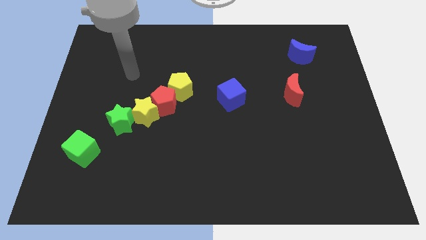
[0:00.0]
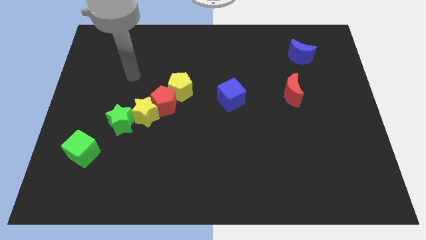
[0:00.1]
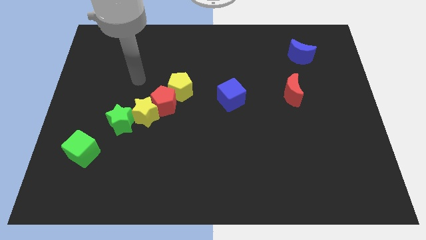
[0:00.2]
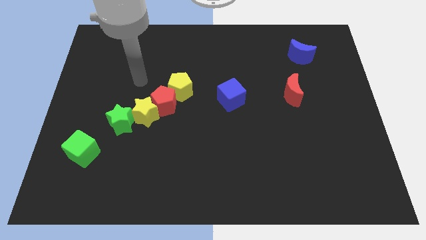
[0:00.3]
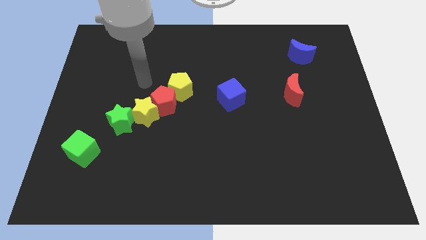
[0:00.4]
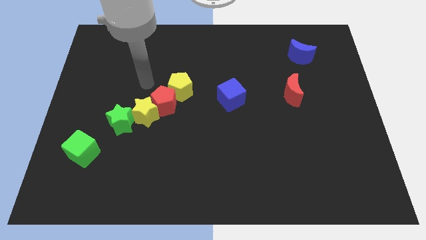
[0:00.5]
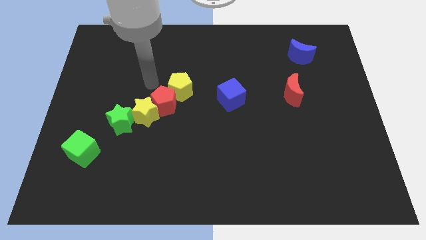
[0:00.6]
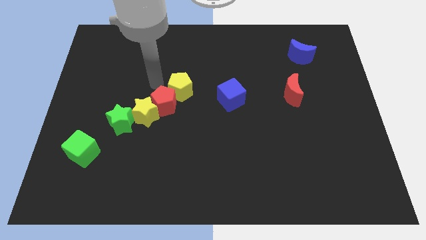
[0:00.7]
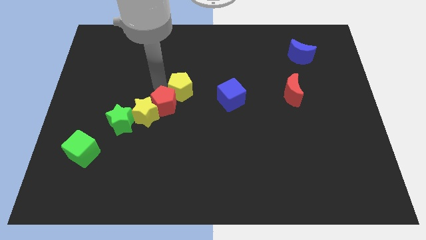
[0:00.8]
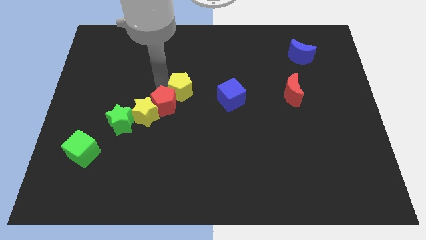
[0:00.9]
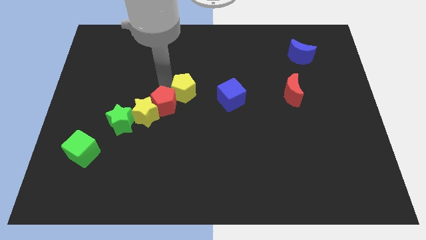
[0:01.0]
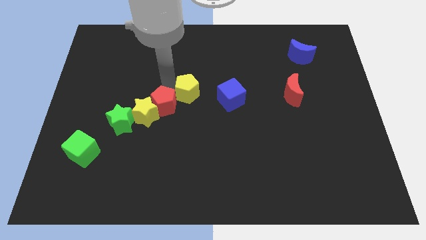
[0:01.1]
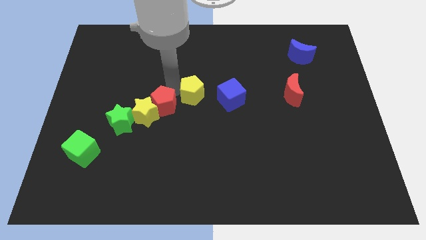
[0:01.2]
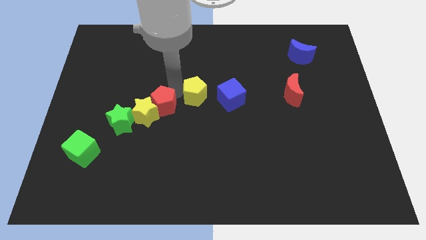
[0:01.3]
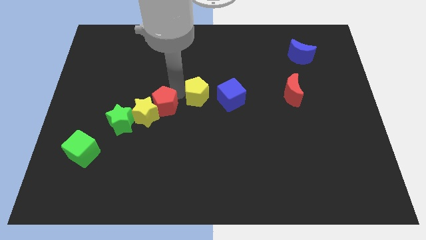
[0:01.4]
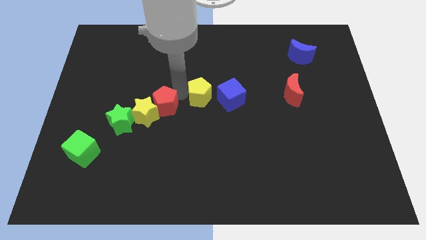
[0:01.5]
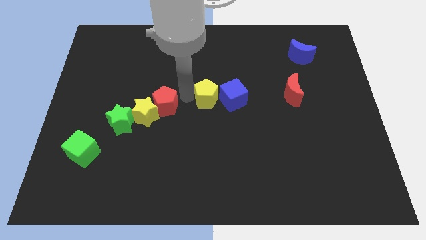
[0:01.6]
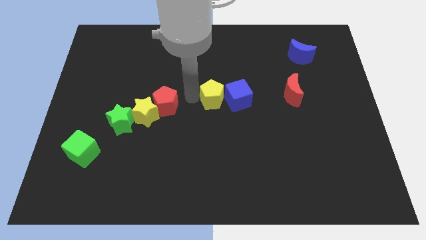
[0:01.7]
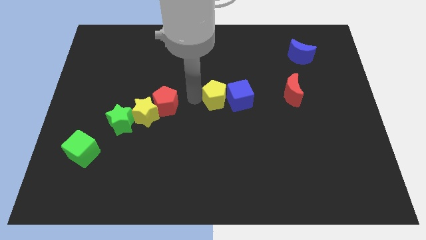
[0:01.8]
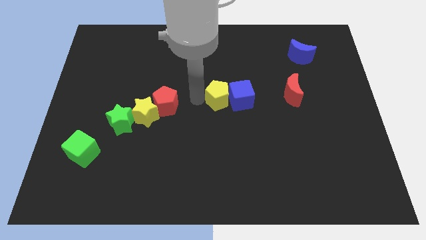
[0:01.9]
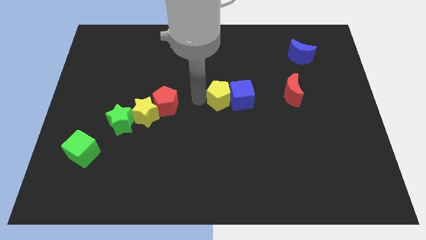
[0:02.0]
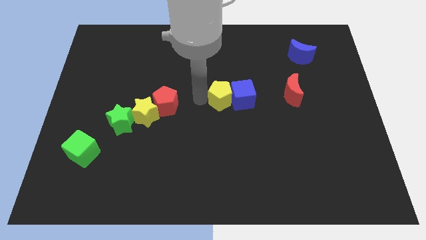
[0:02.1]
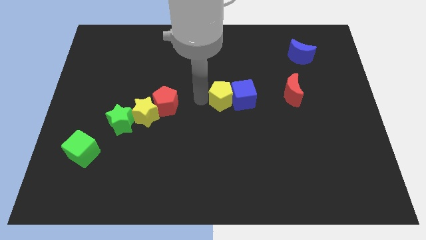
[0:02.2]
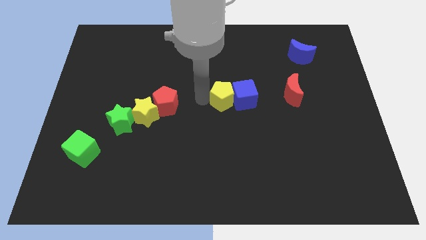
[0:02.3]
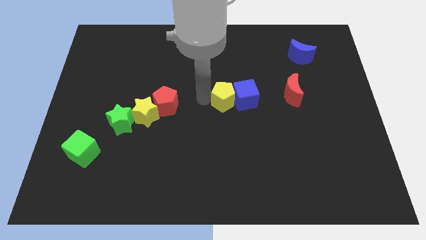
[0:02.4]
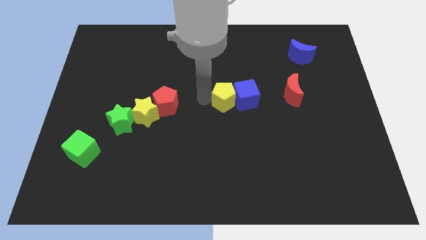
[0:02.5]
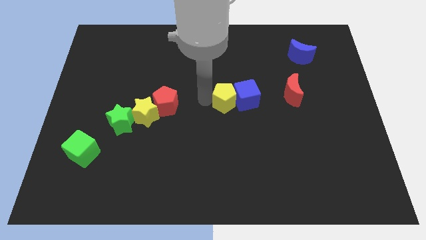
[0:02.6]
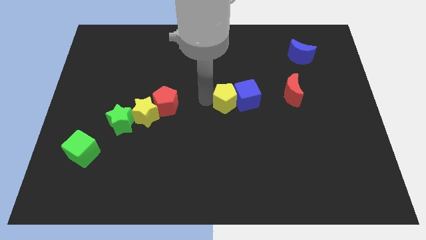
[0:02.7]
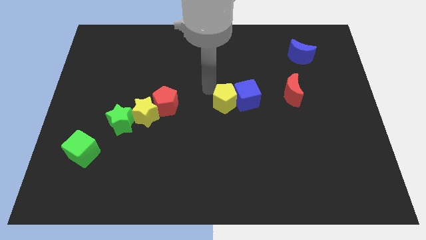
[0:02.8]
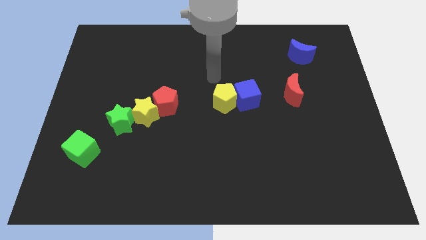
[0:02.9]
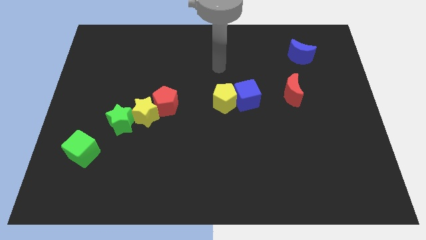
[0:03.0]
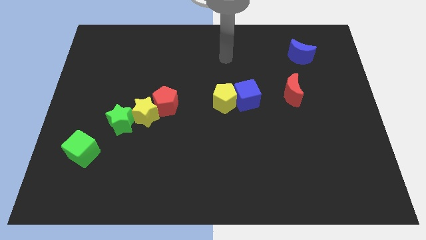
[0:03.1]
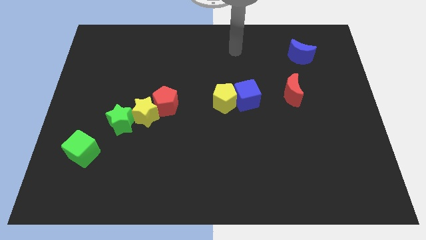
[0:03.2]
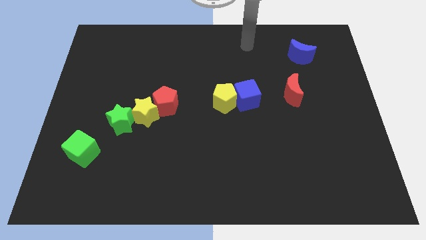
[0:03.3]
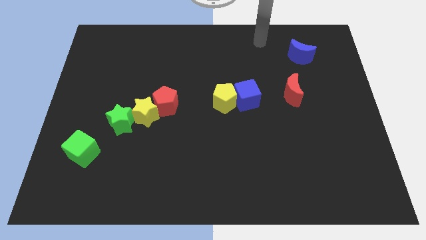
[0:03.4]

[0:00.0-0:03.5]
push the yellow pentagon into the blue cube

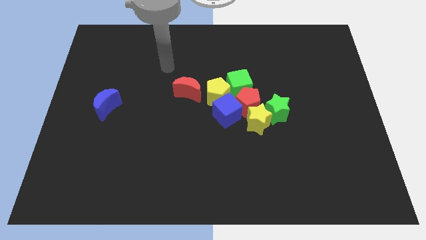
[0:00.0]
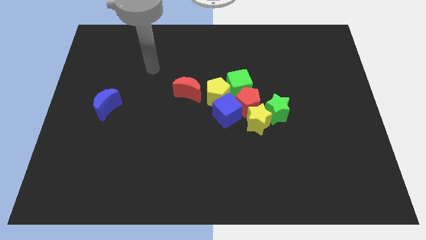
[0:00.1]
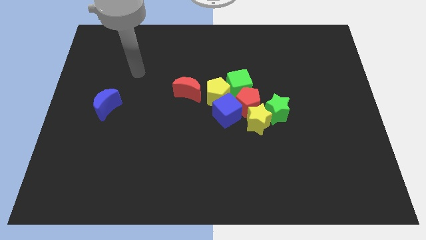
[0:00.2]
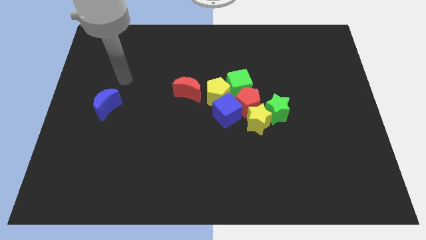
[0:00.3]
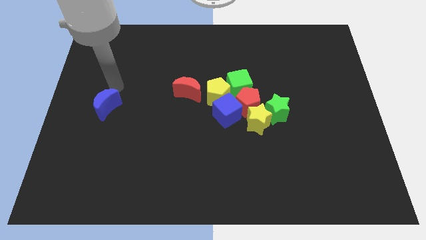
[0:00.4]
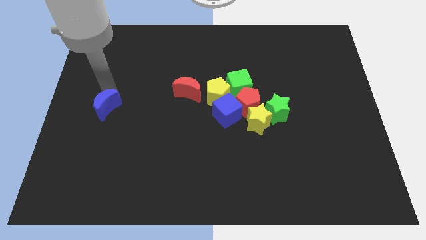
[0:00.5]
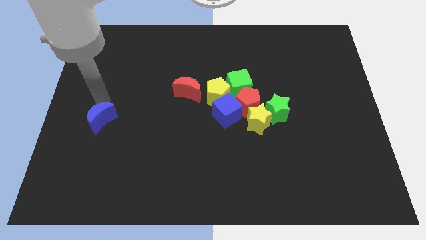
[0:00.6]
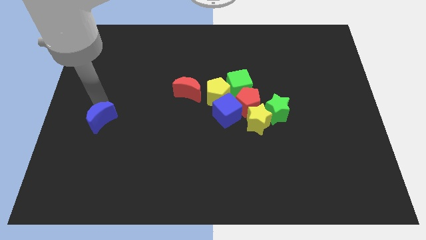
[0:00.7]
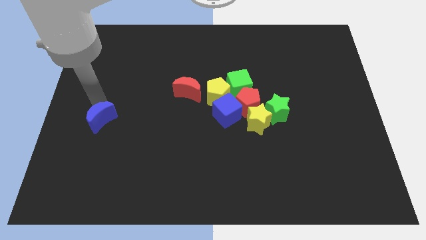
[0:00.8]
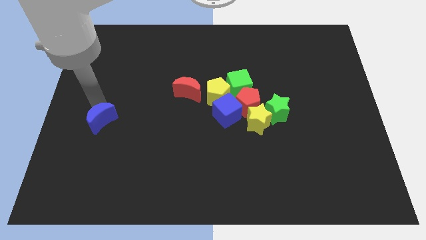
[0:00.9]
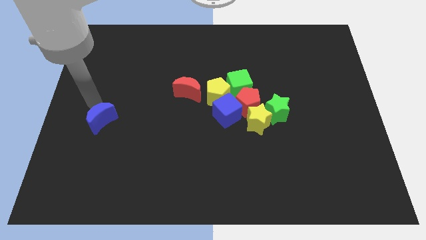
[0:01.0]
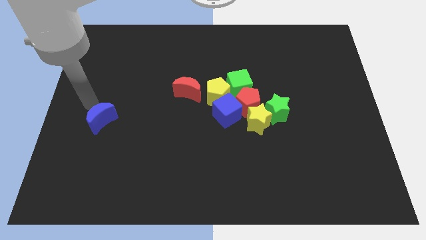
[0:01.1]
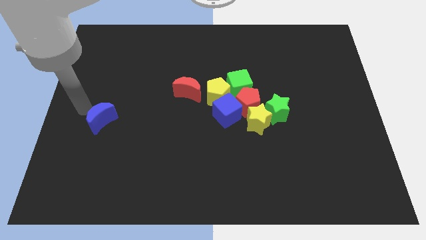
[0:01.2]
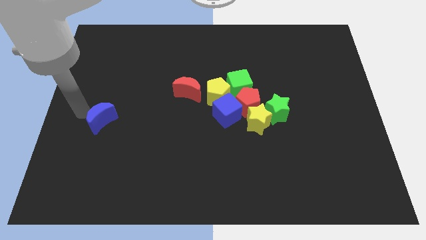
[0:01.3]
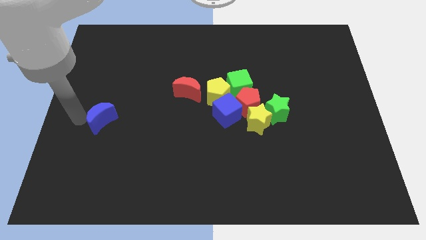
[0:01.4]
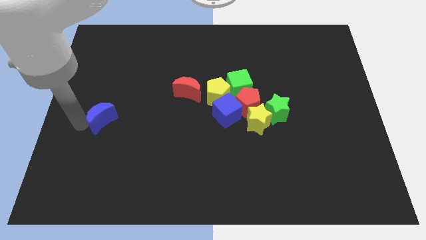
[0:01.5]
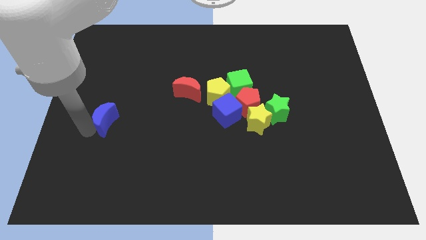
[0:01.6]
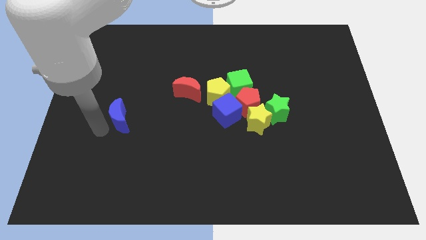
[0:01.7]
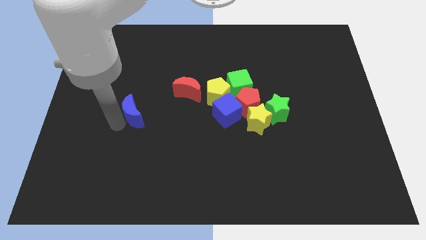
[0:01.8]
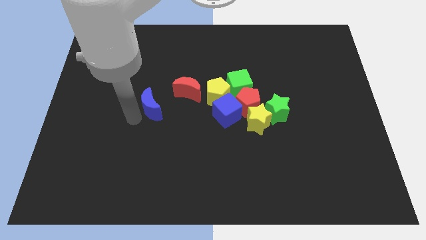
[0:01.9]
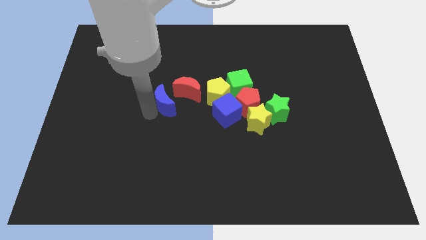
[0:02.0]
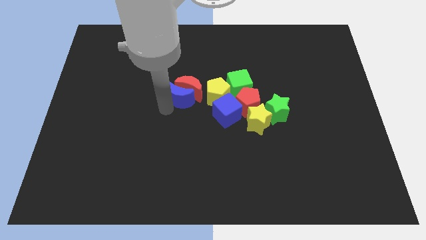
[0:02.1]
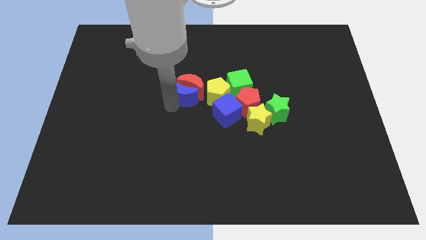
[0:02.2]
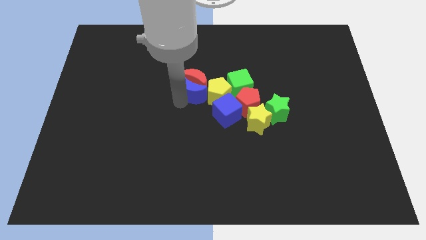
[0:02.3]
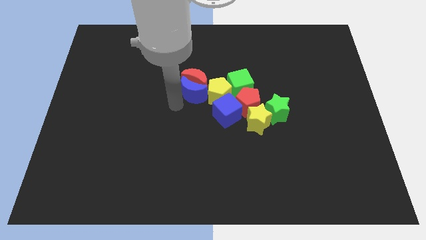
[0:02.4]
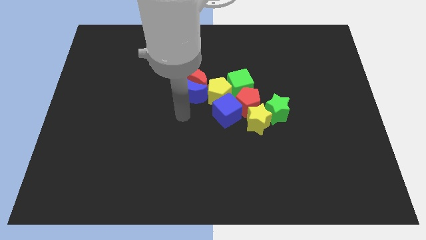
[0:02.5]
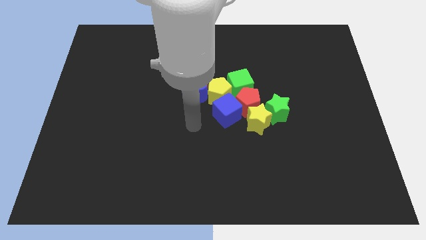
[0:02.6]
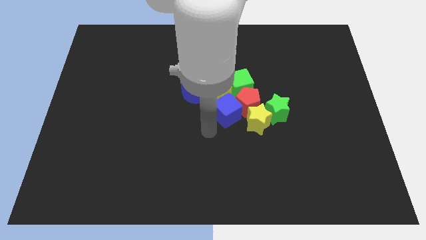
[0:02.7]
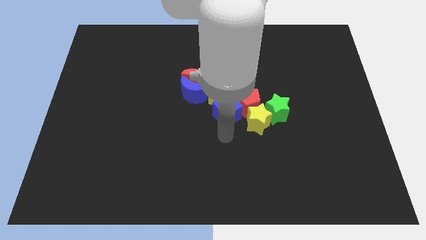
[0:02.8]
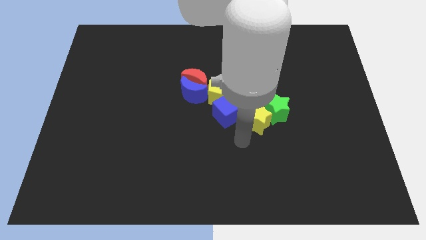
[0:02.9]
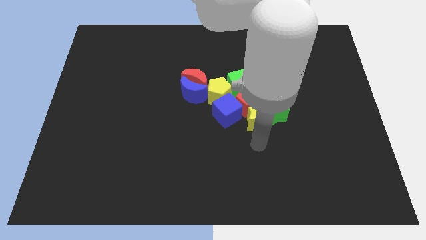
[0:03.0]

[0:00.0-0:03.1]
move the blue crescent into the bottom side of the red crescent

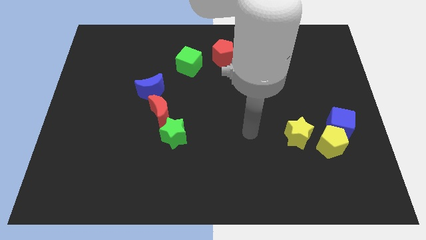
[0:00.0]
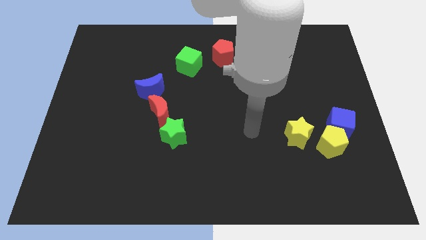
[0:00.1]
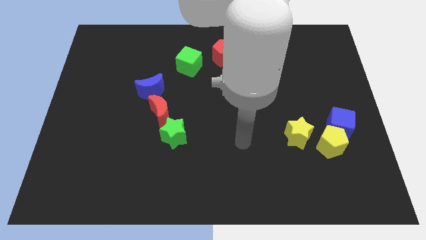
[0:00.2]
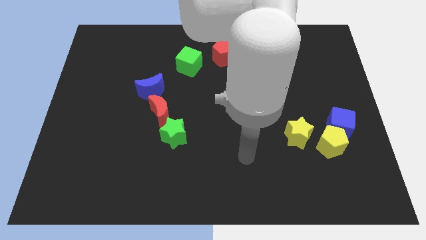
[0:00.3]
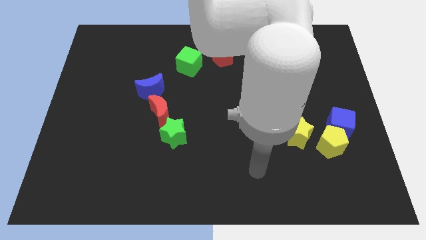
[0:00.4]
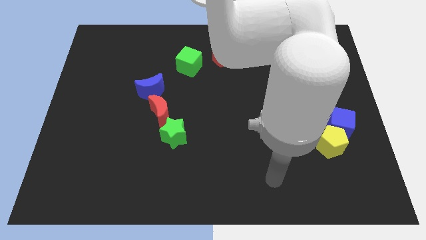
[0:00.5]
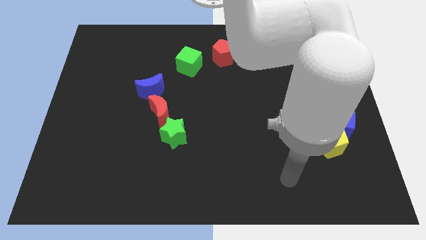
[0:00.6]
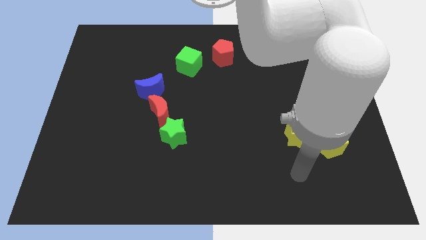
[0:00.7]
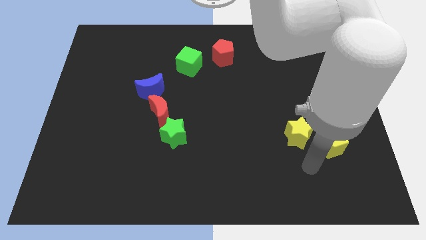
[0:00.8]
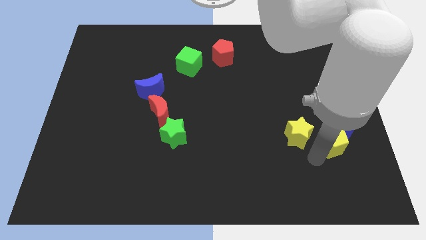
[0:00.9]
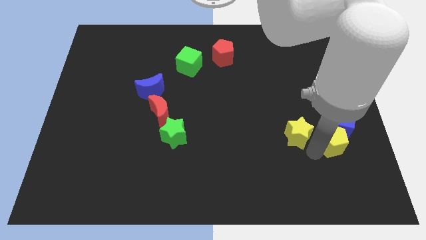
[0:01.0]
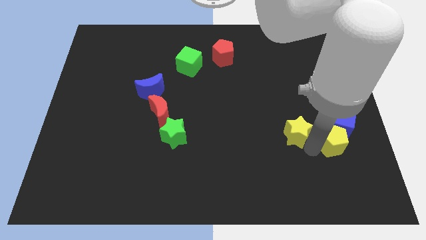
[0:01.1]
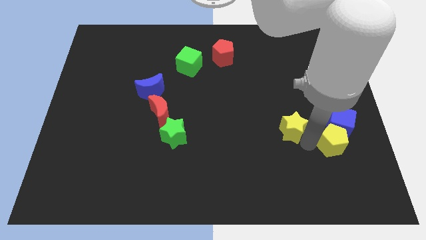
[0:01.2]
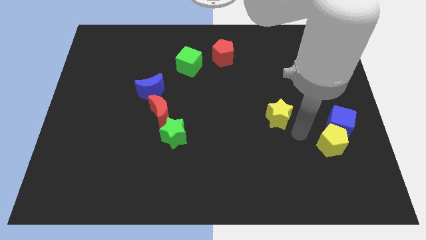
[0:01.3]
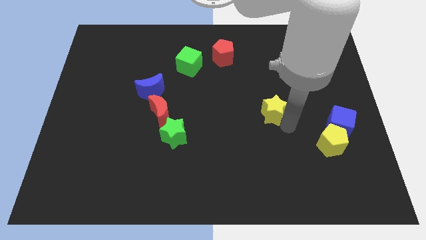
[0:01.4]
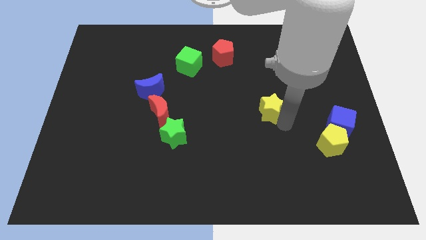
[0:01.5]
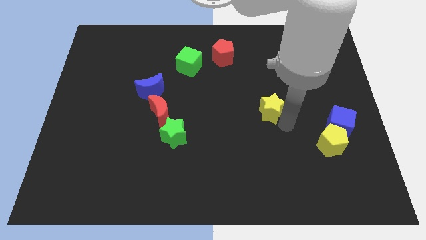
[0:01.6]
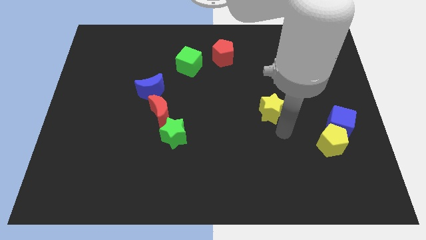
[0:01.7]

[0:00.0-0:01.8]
push the yellow star to the right of the red crescent

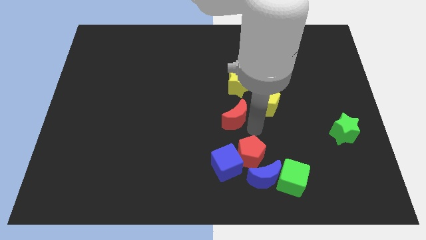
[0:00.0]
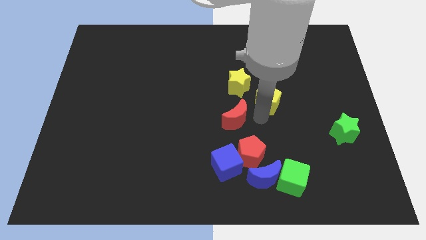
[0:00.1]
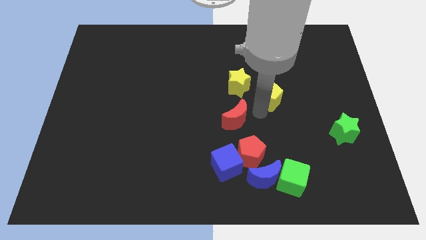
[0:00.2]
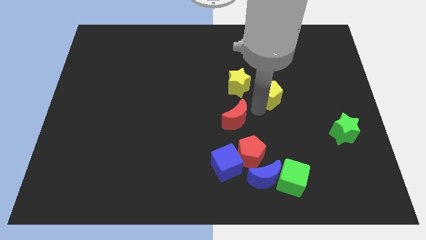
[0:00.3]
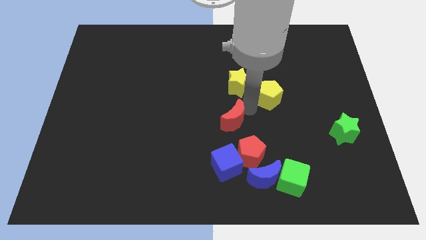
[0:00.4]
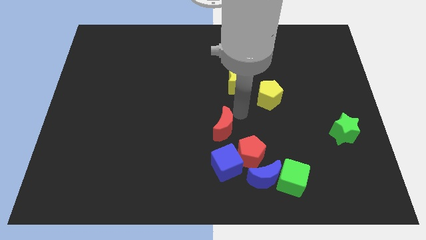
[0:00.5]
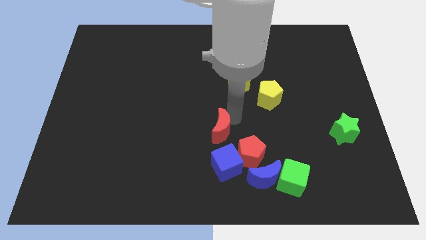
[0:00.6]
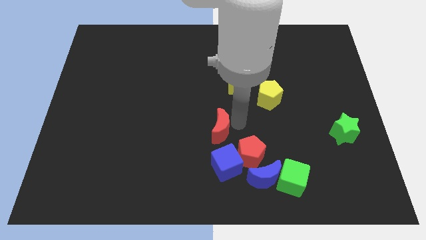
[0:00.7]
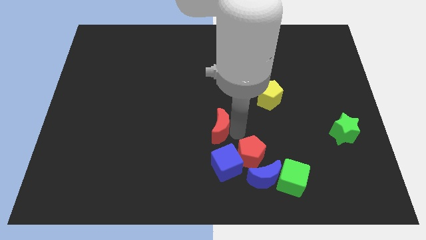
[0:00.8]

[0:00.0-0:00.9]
separate red moon from the yellow star
